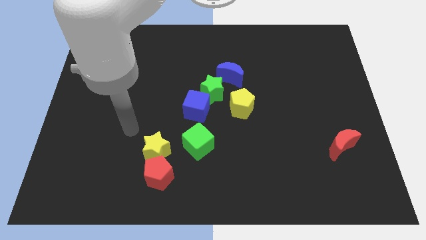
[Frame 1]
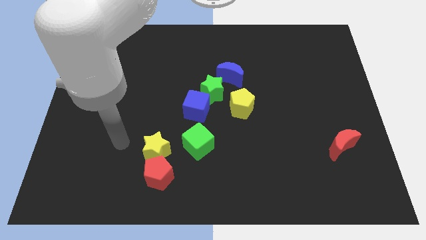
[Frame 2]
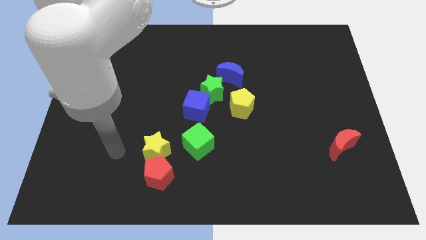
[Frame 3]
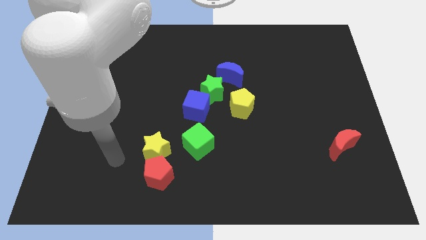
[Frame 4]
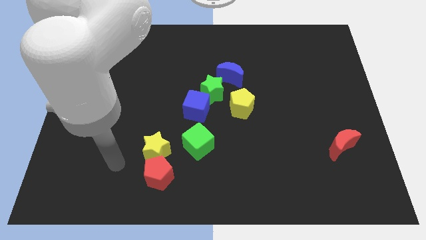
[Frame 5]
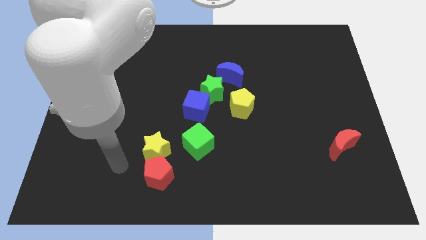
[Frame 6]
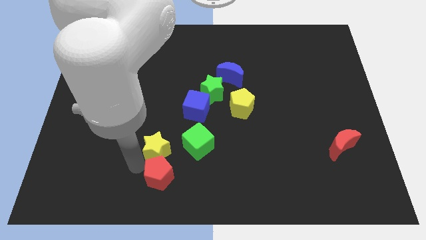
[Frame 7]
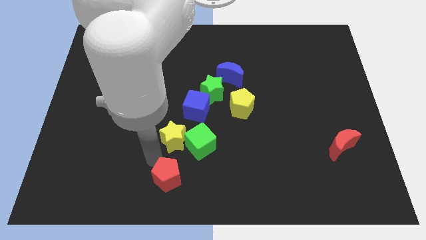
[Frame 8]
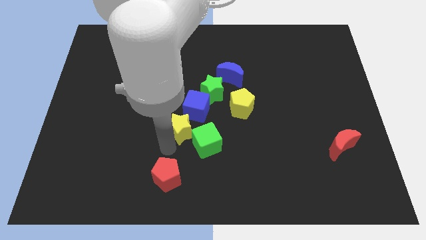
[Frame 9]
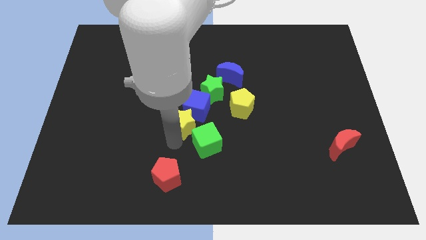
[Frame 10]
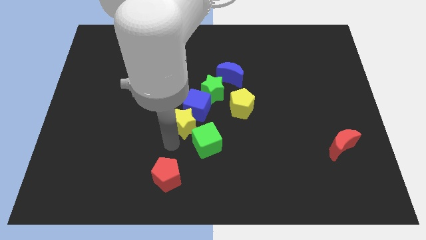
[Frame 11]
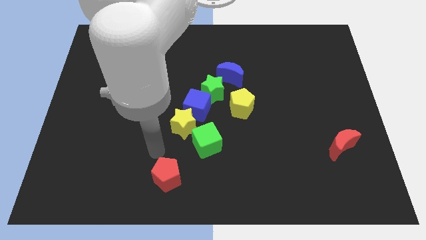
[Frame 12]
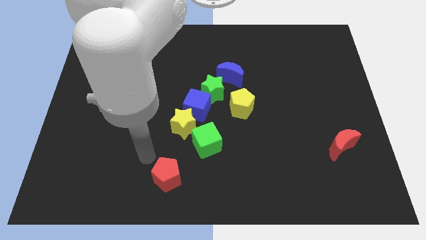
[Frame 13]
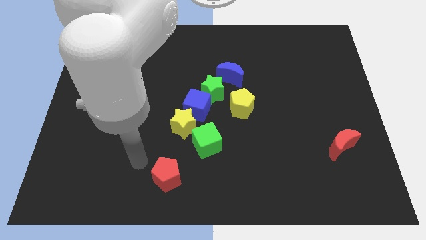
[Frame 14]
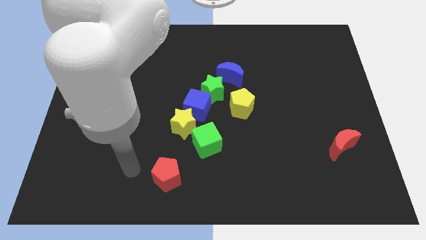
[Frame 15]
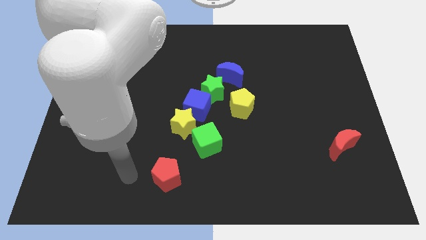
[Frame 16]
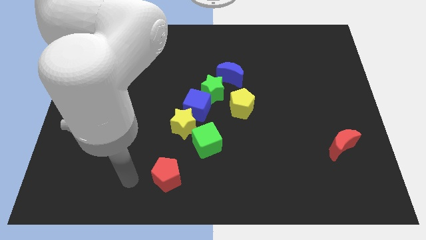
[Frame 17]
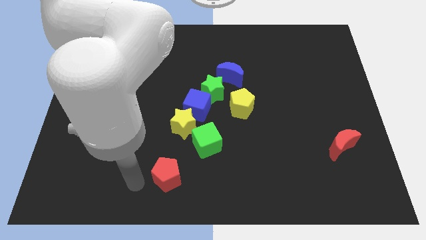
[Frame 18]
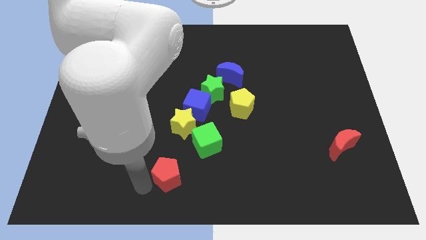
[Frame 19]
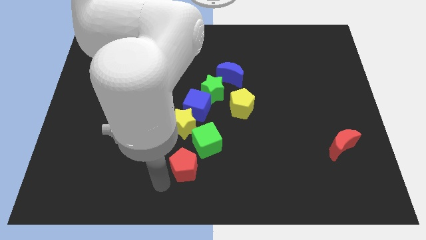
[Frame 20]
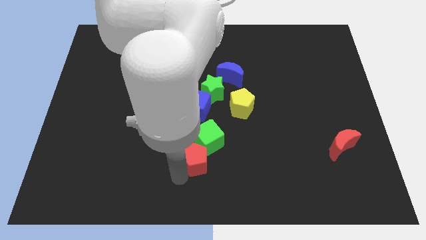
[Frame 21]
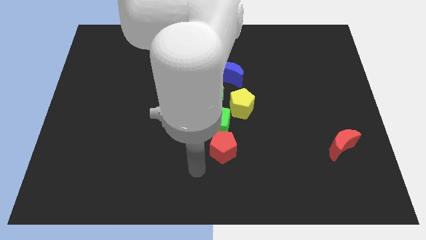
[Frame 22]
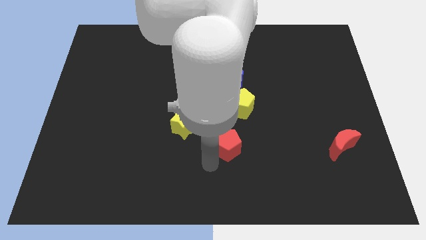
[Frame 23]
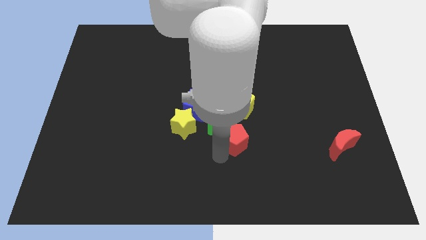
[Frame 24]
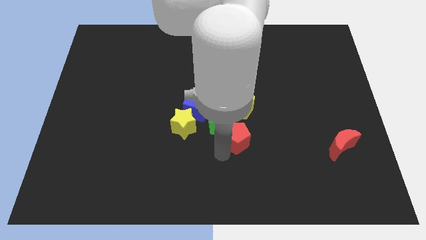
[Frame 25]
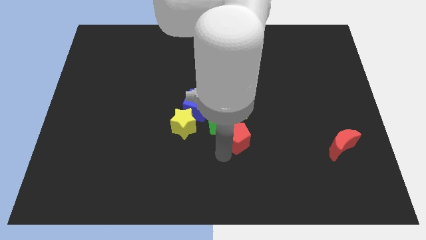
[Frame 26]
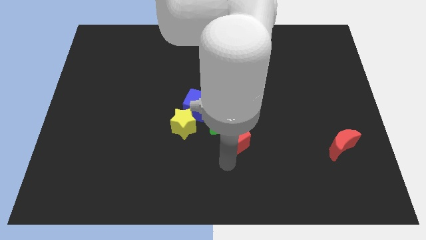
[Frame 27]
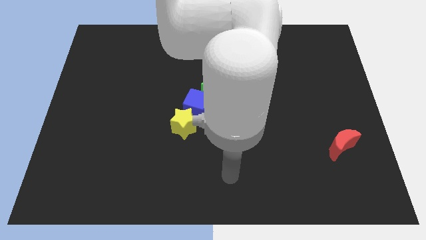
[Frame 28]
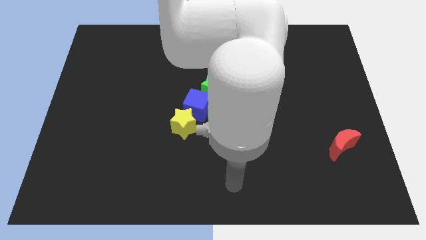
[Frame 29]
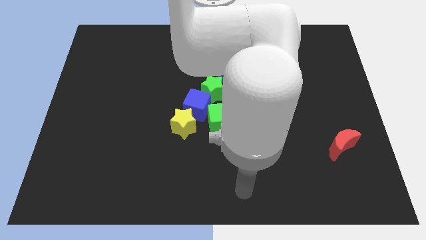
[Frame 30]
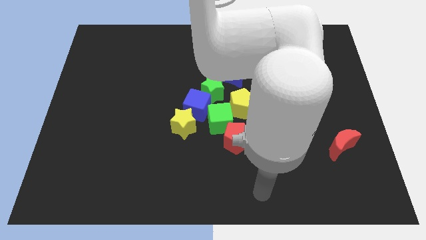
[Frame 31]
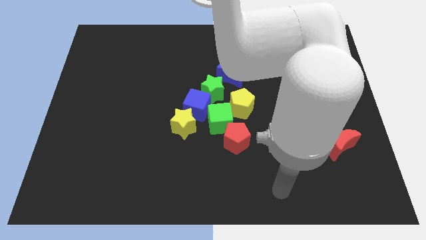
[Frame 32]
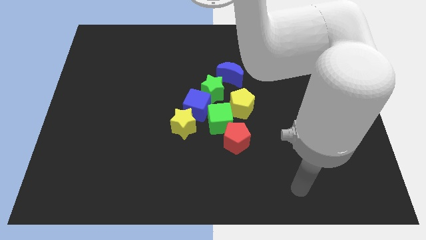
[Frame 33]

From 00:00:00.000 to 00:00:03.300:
move the yellow star and red pentagon on either sides of the green cube

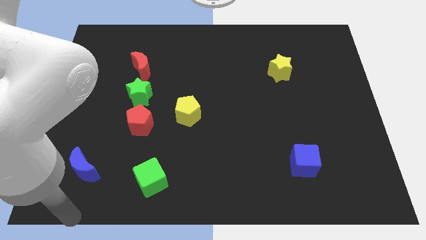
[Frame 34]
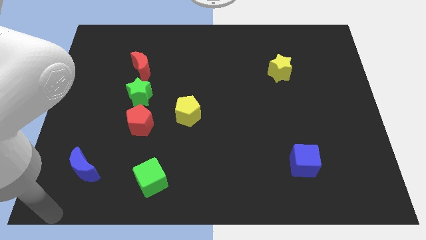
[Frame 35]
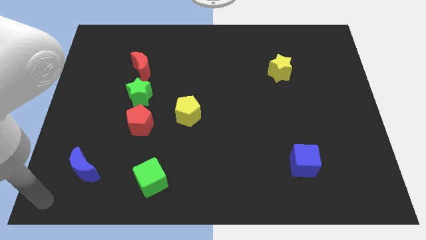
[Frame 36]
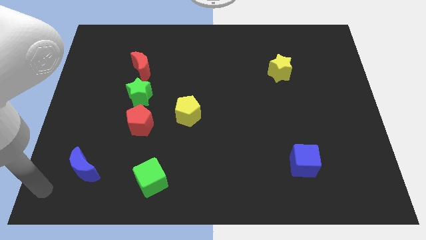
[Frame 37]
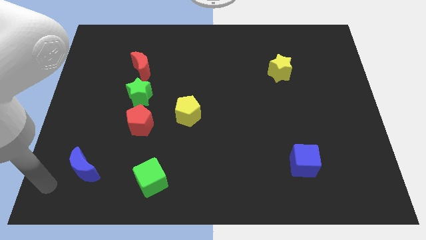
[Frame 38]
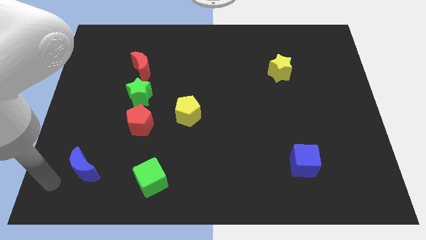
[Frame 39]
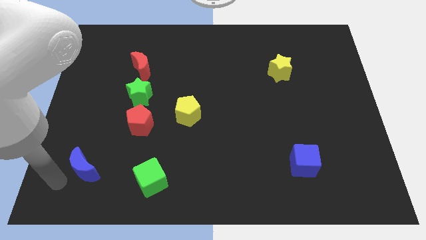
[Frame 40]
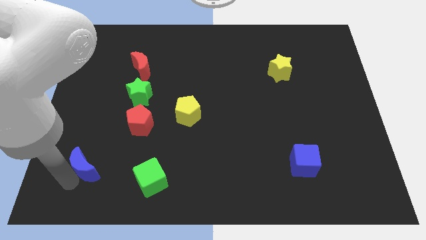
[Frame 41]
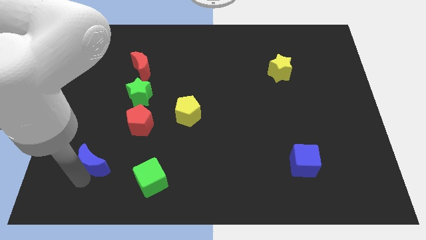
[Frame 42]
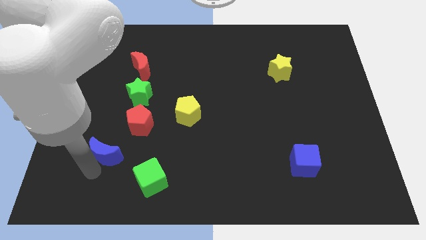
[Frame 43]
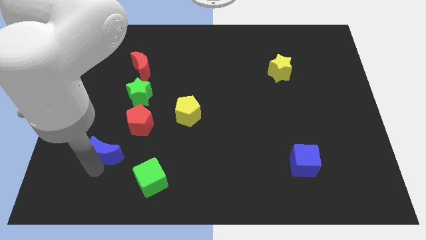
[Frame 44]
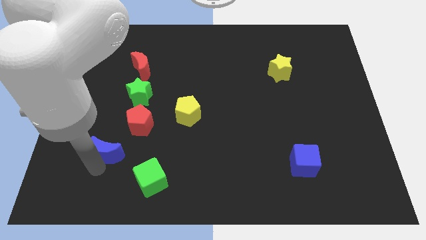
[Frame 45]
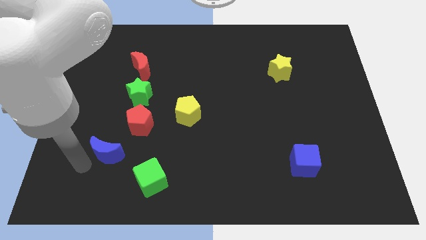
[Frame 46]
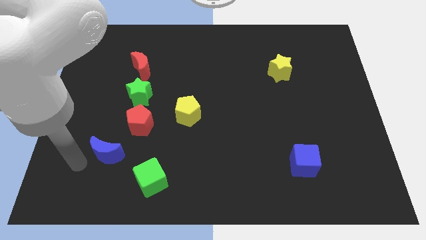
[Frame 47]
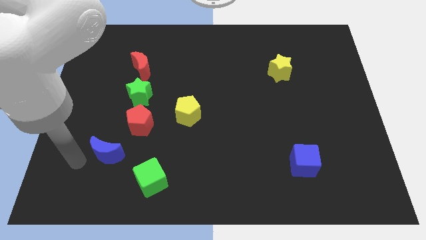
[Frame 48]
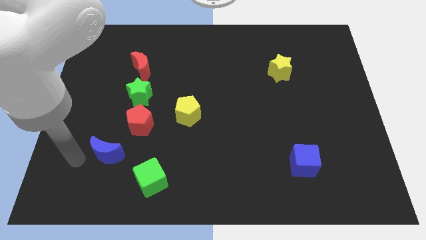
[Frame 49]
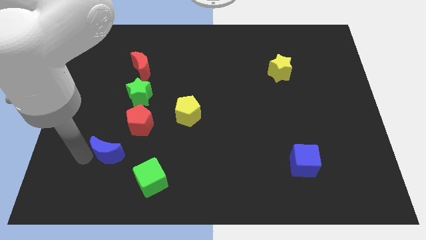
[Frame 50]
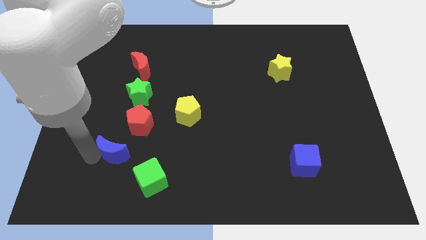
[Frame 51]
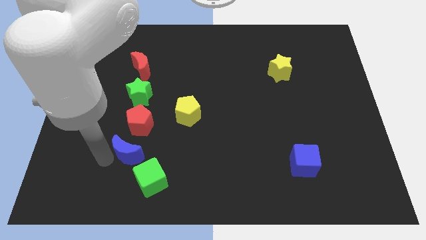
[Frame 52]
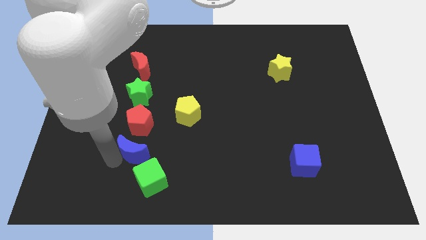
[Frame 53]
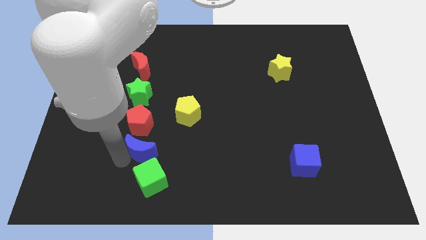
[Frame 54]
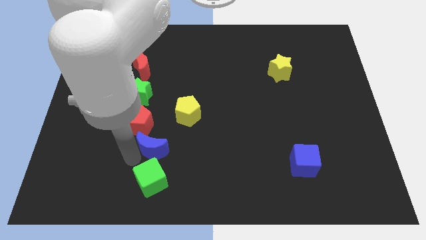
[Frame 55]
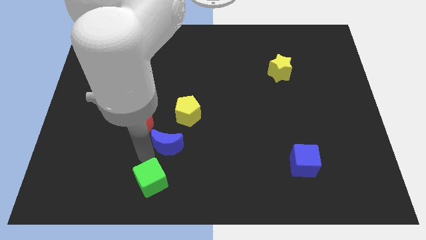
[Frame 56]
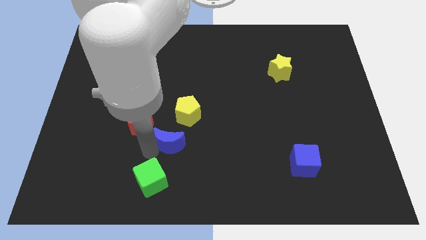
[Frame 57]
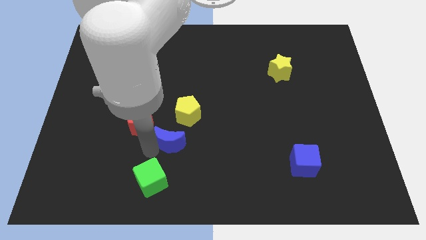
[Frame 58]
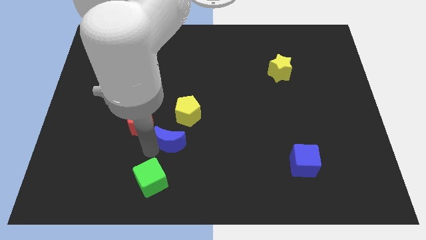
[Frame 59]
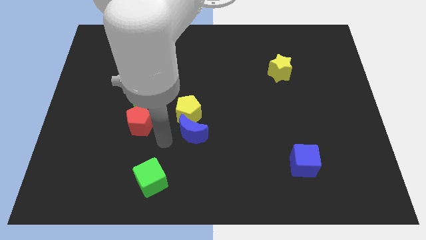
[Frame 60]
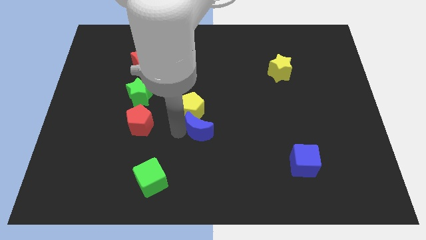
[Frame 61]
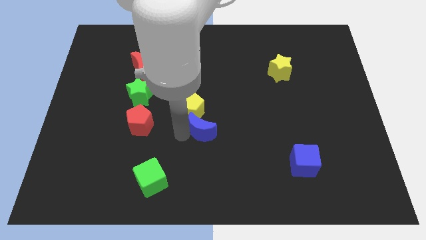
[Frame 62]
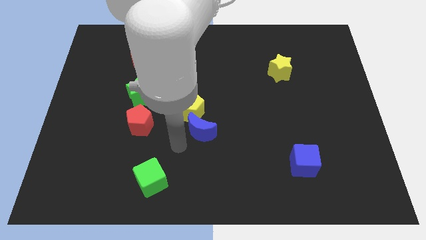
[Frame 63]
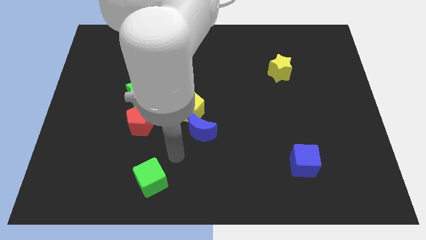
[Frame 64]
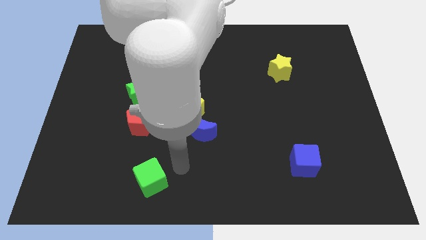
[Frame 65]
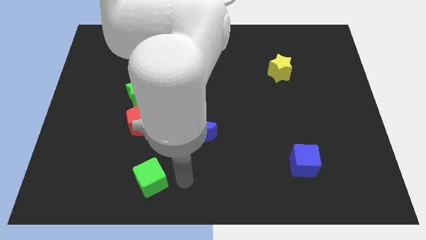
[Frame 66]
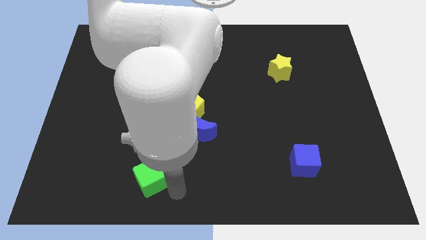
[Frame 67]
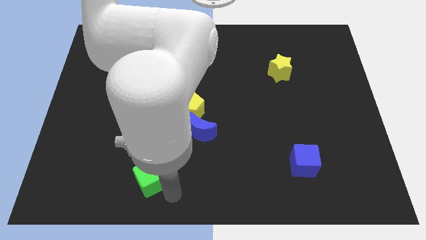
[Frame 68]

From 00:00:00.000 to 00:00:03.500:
place the blue crescent below the yellow pentagon

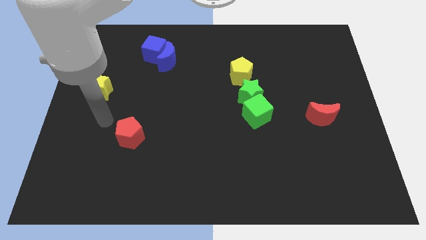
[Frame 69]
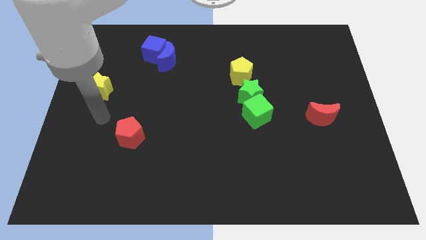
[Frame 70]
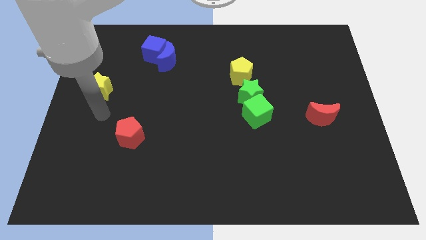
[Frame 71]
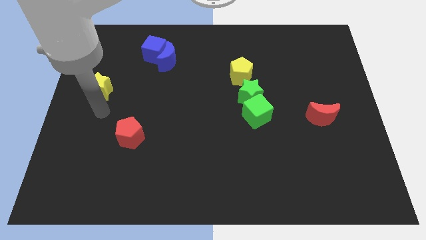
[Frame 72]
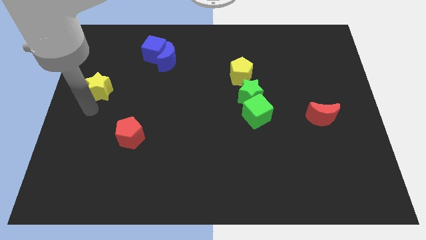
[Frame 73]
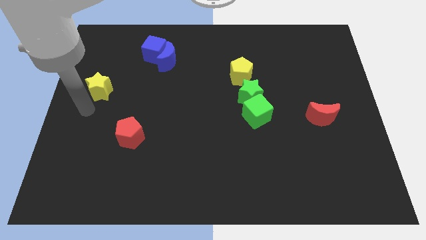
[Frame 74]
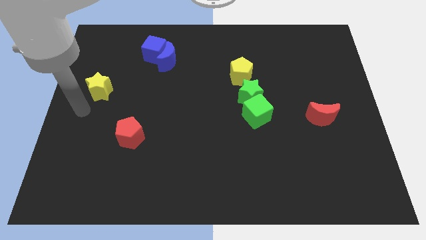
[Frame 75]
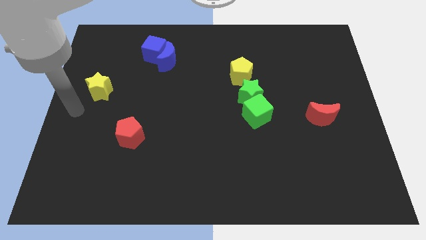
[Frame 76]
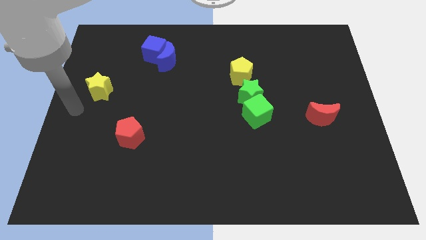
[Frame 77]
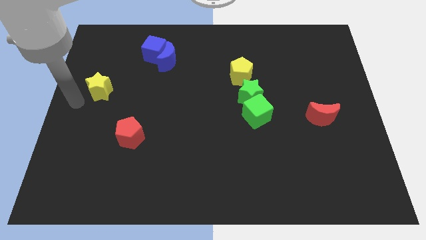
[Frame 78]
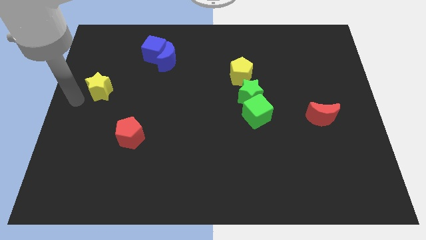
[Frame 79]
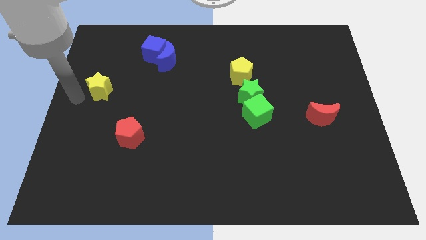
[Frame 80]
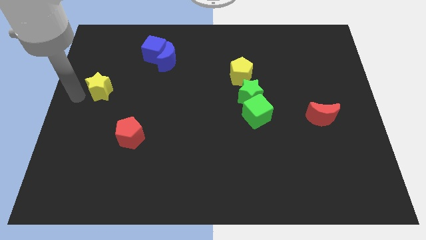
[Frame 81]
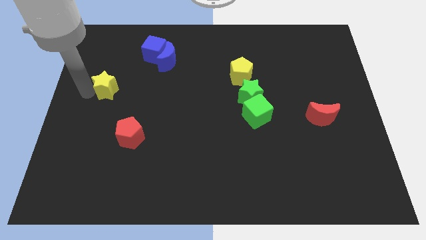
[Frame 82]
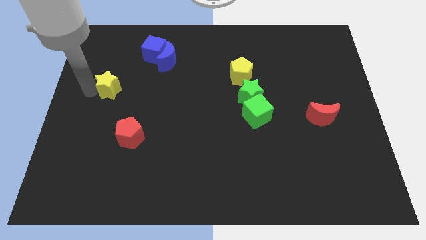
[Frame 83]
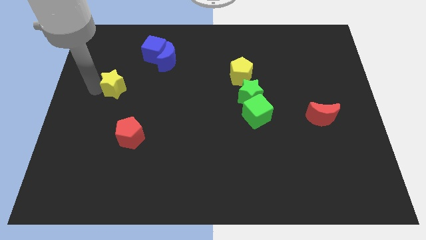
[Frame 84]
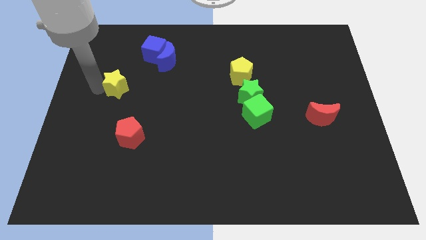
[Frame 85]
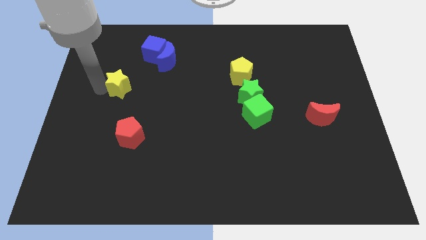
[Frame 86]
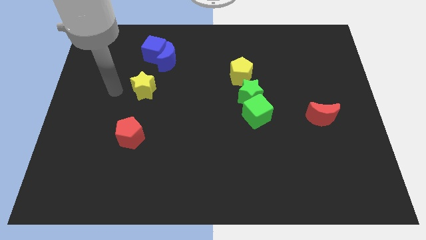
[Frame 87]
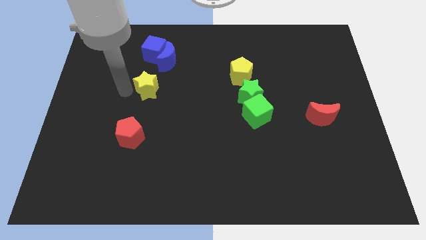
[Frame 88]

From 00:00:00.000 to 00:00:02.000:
place the yellow star at the bottom of the blue blocks
